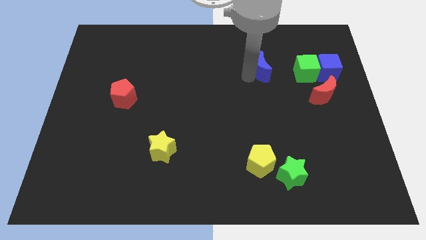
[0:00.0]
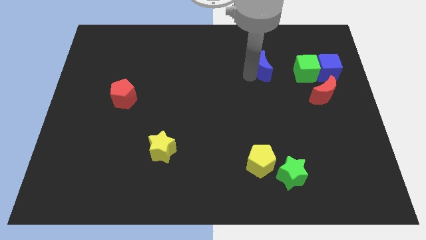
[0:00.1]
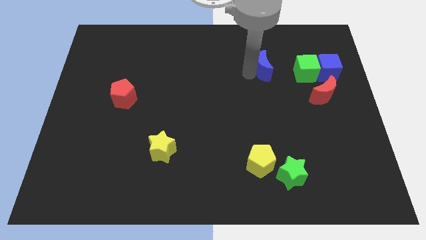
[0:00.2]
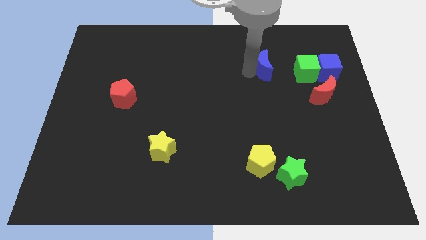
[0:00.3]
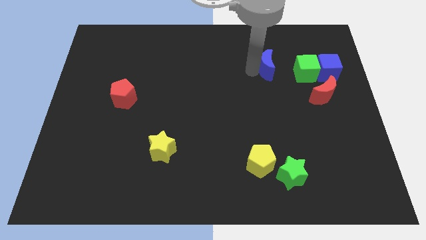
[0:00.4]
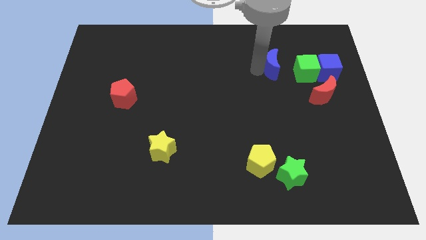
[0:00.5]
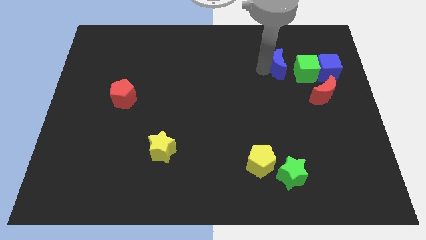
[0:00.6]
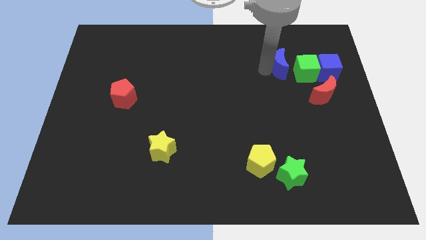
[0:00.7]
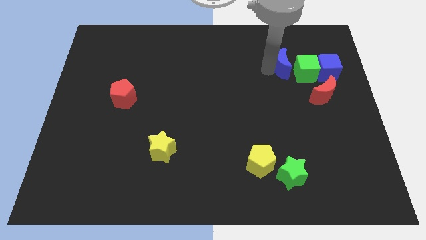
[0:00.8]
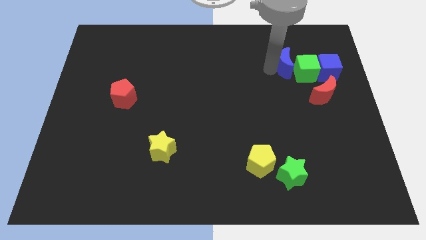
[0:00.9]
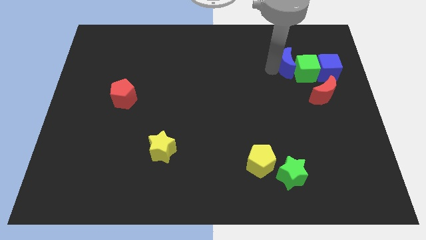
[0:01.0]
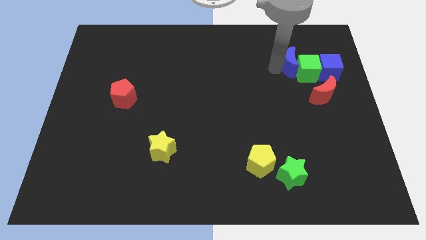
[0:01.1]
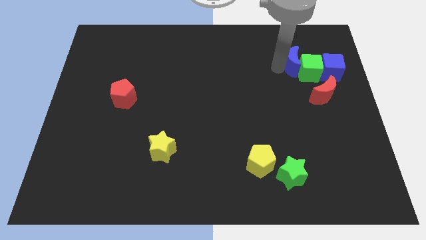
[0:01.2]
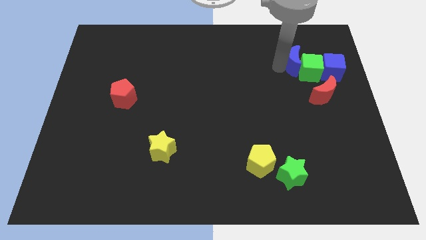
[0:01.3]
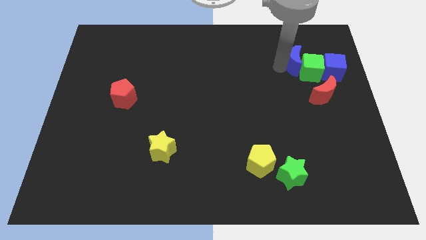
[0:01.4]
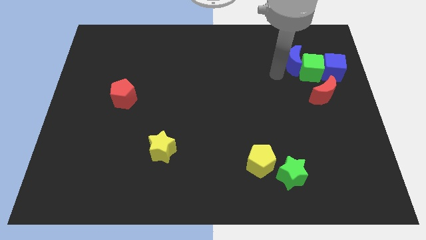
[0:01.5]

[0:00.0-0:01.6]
slide the blue crescent into the green cube

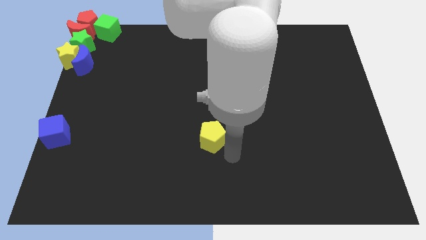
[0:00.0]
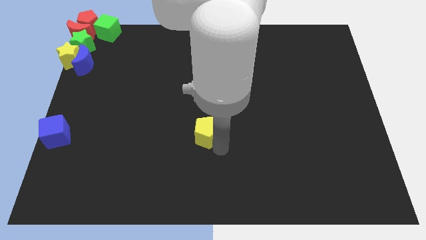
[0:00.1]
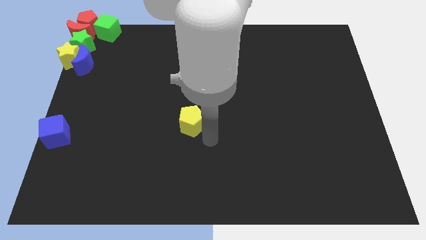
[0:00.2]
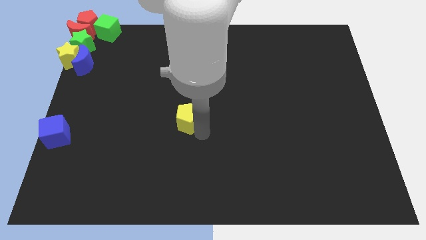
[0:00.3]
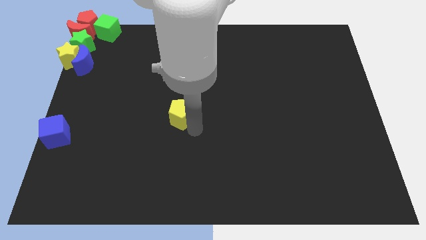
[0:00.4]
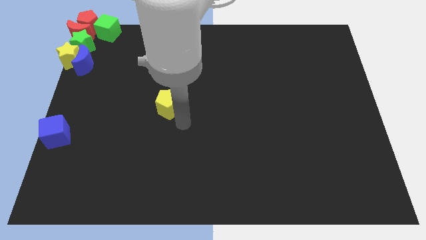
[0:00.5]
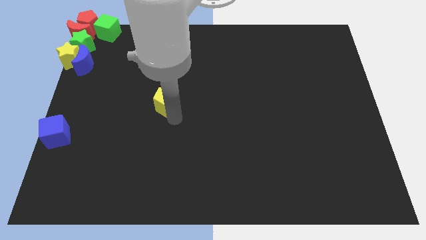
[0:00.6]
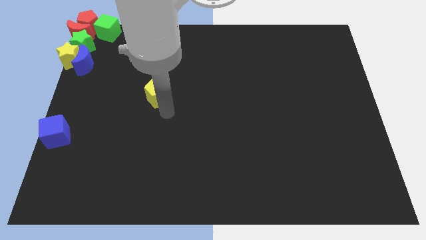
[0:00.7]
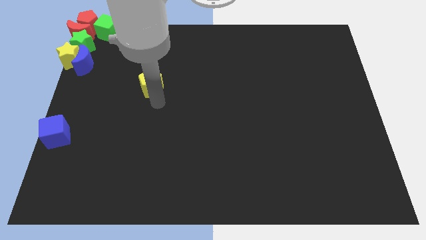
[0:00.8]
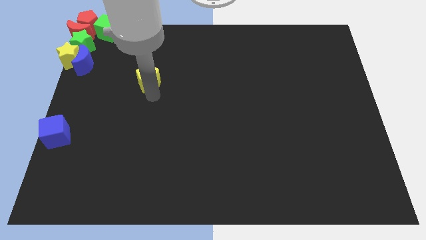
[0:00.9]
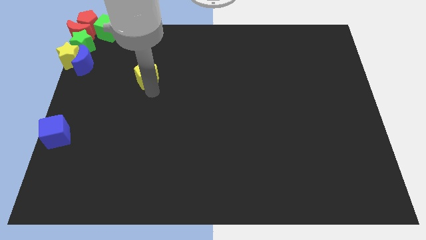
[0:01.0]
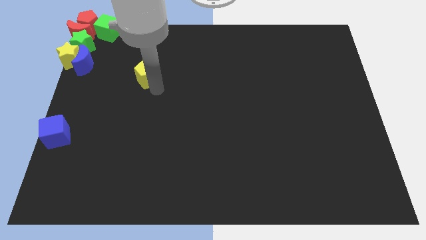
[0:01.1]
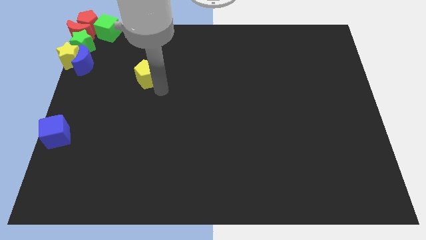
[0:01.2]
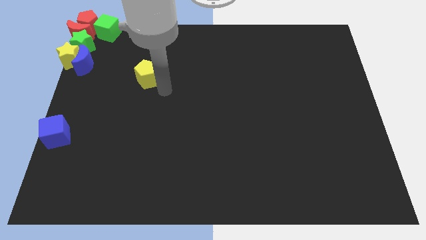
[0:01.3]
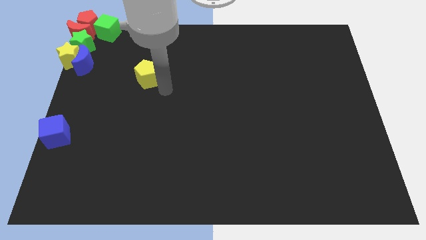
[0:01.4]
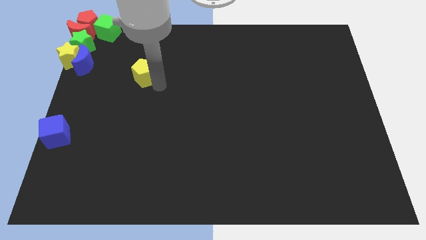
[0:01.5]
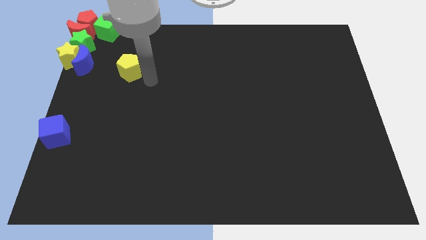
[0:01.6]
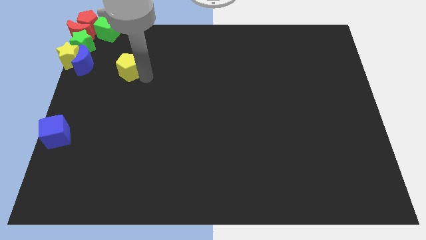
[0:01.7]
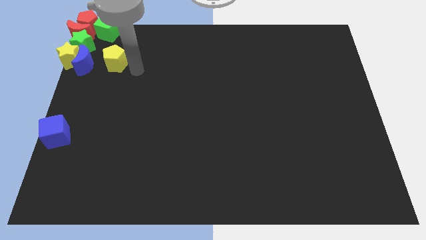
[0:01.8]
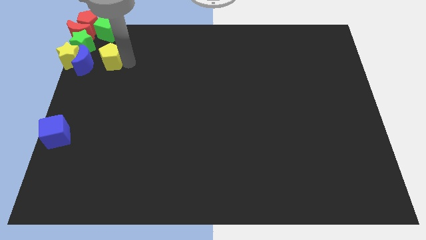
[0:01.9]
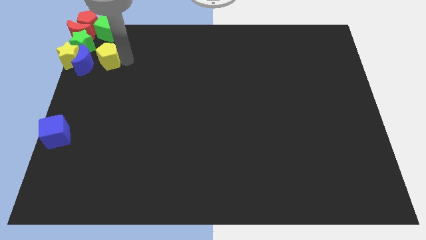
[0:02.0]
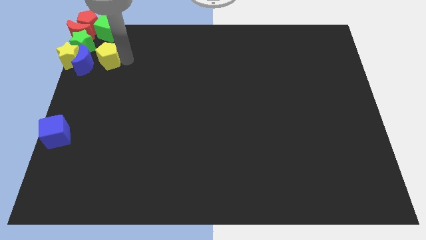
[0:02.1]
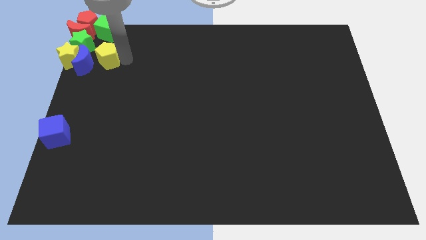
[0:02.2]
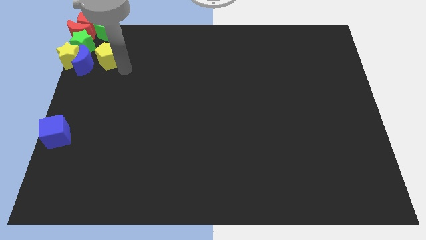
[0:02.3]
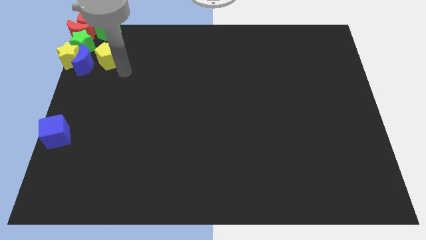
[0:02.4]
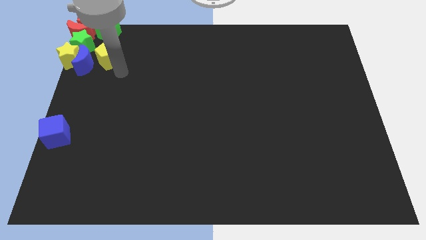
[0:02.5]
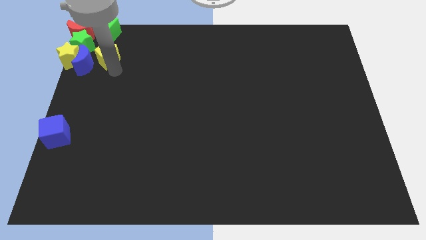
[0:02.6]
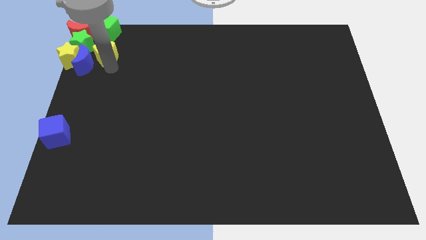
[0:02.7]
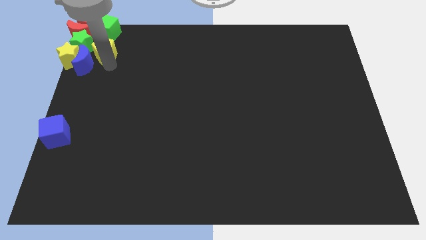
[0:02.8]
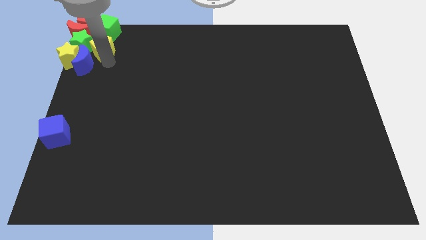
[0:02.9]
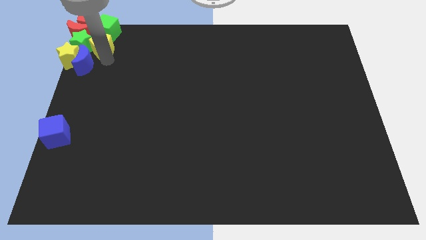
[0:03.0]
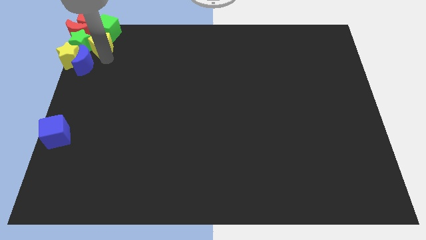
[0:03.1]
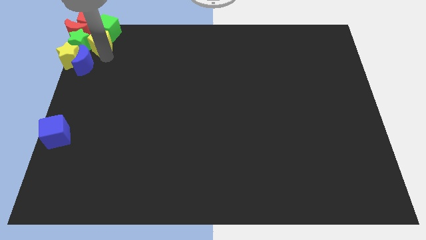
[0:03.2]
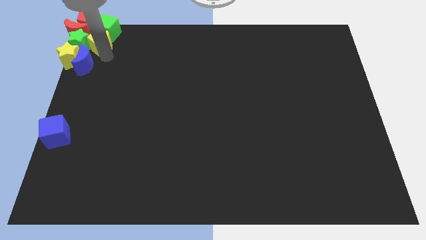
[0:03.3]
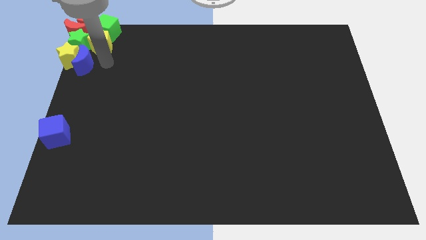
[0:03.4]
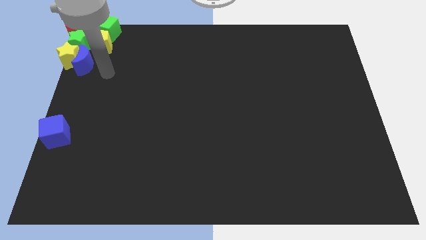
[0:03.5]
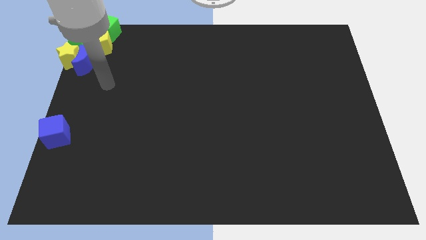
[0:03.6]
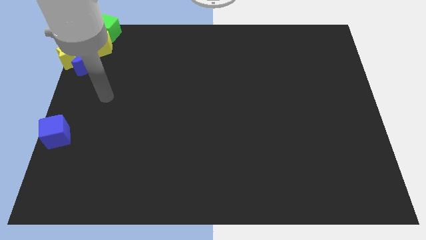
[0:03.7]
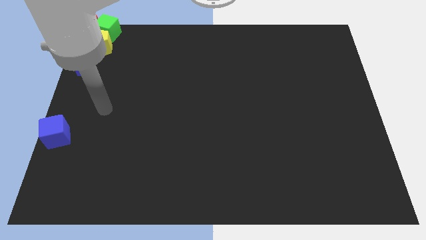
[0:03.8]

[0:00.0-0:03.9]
move the yellow pentagon to the right side of the green star

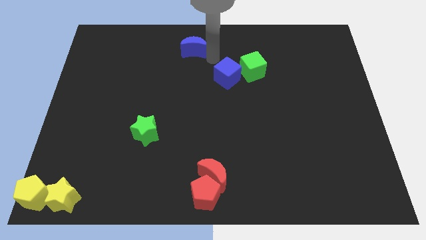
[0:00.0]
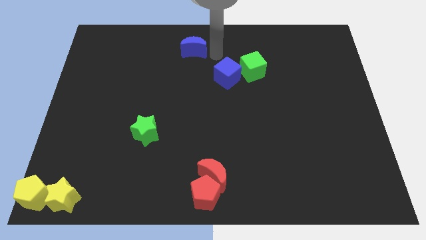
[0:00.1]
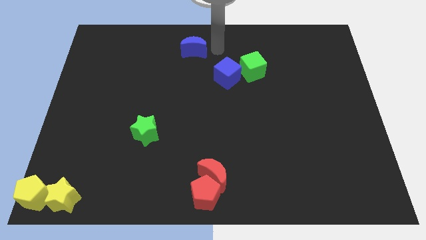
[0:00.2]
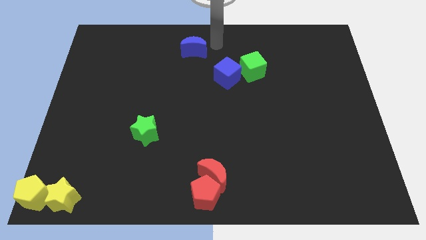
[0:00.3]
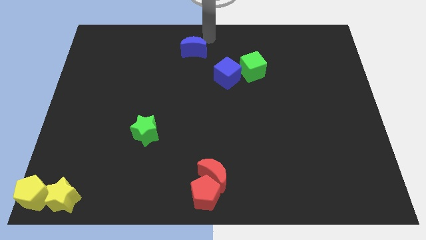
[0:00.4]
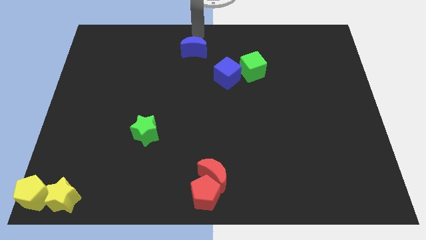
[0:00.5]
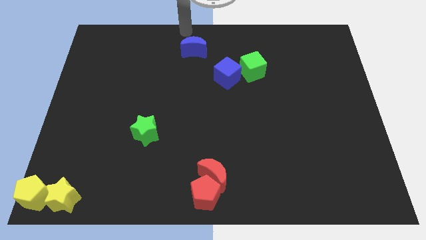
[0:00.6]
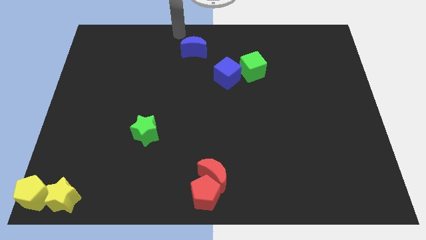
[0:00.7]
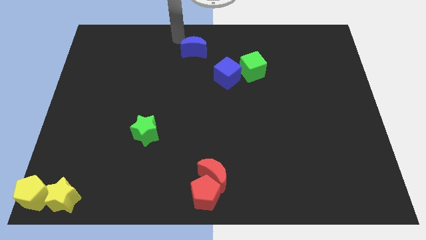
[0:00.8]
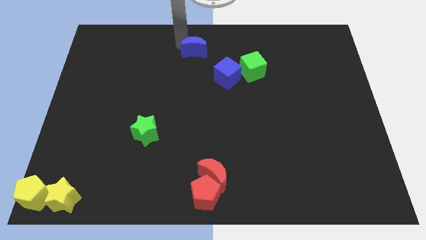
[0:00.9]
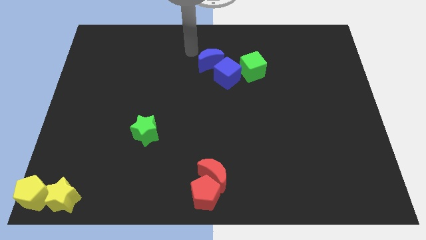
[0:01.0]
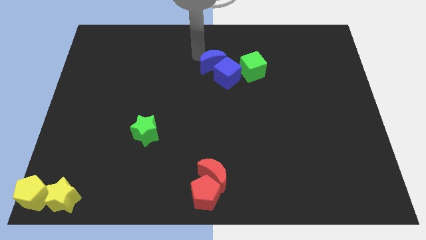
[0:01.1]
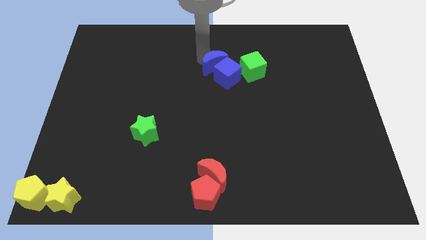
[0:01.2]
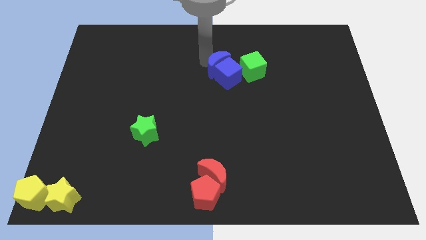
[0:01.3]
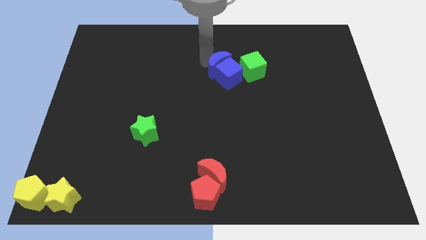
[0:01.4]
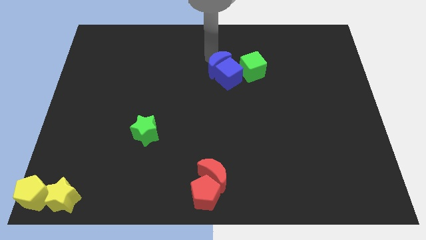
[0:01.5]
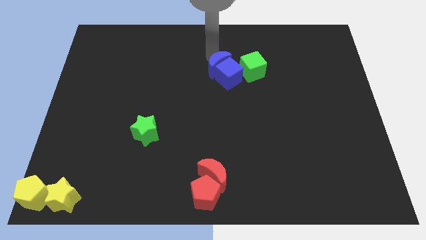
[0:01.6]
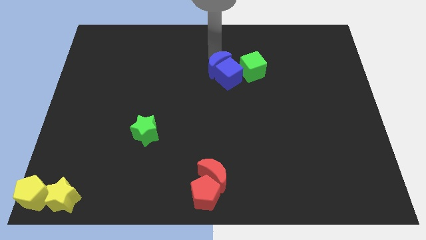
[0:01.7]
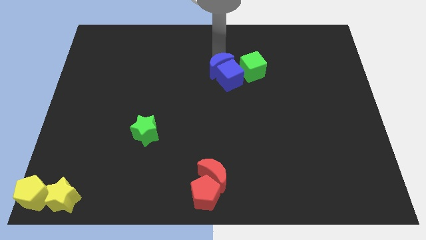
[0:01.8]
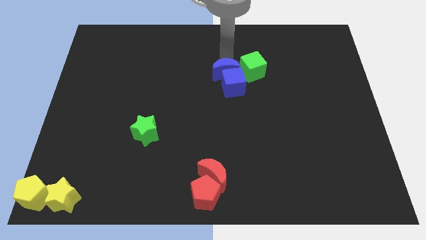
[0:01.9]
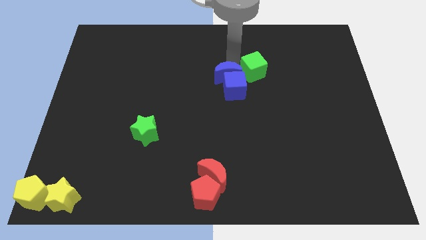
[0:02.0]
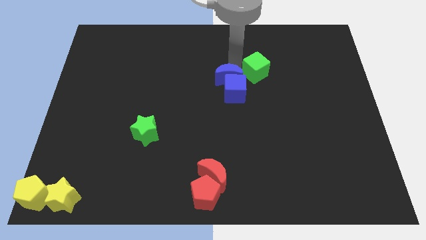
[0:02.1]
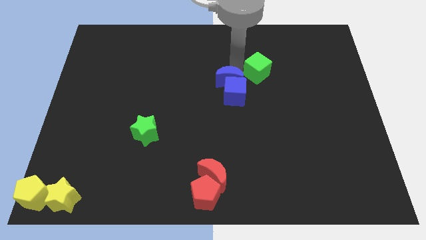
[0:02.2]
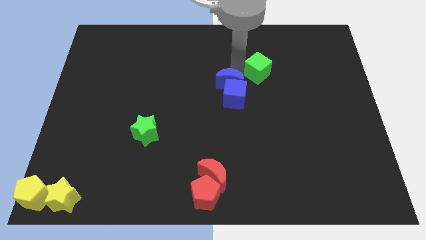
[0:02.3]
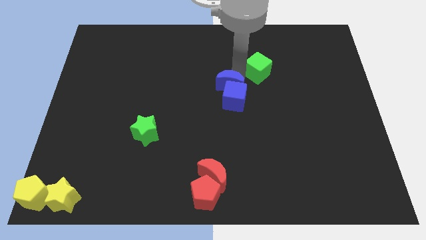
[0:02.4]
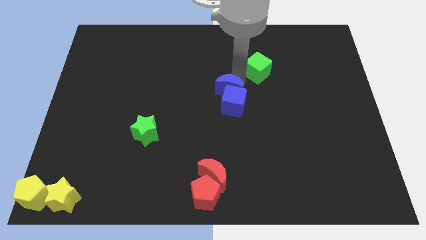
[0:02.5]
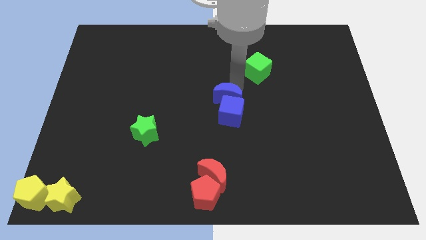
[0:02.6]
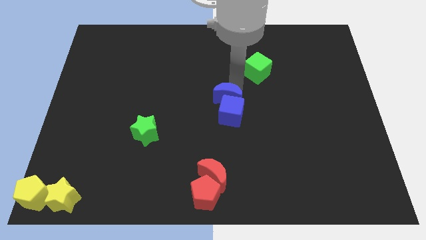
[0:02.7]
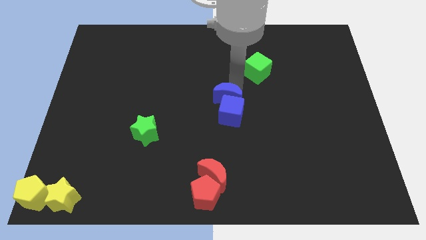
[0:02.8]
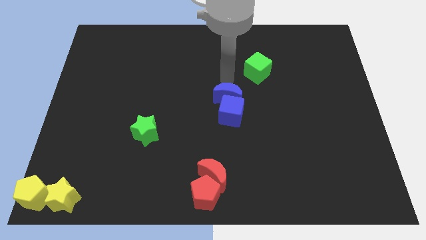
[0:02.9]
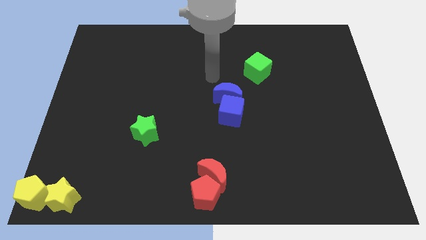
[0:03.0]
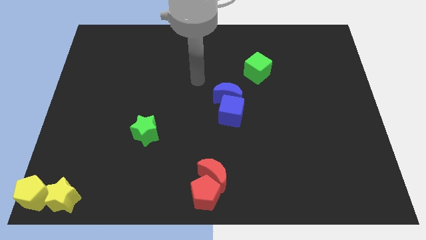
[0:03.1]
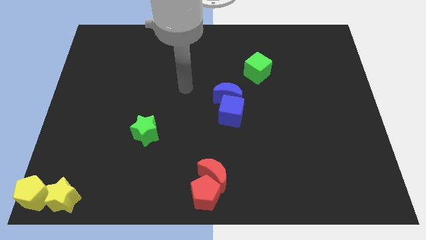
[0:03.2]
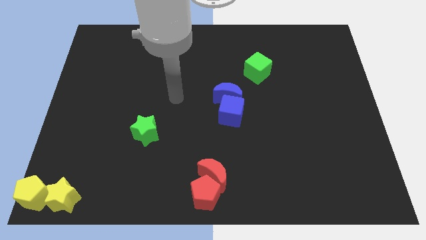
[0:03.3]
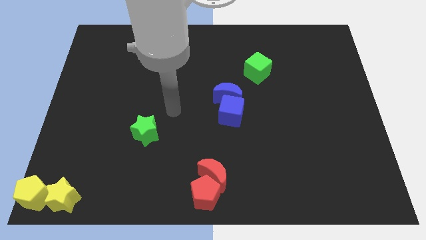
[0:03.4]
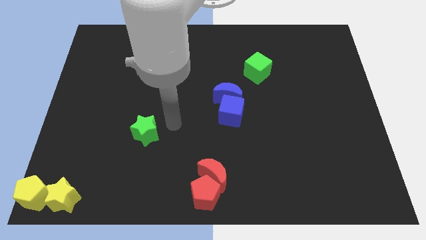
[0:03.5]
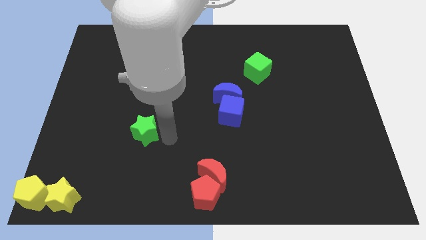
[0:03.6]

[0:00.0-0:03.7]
place the blue blocks above the red moon
